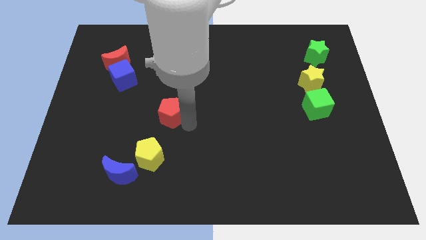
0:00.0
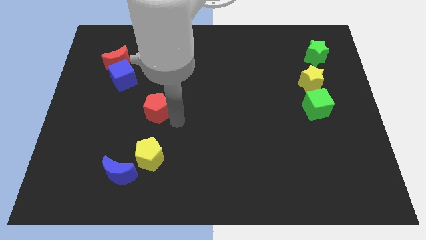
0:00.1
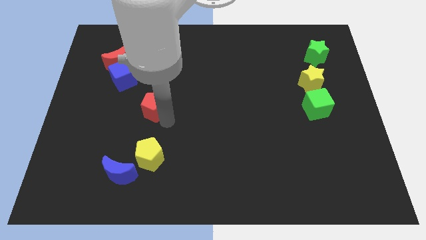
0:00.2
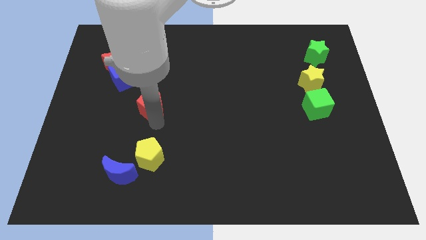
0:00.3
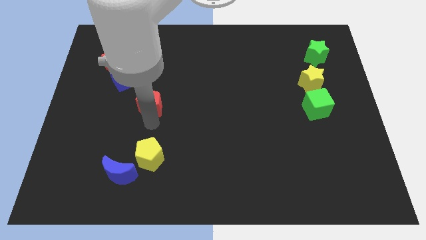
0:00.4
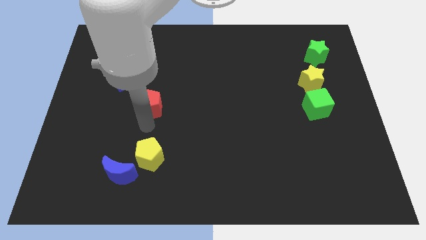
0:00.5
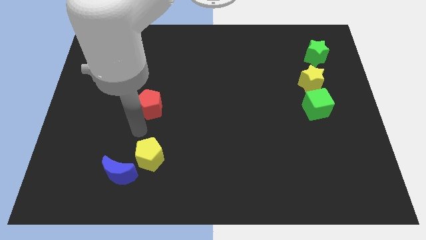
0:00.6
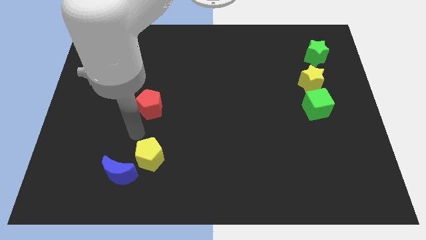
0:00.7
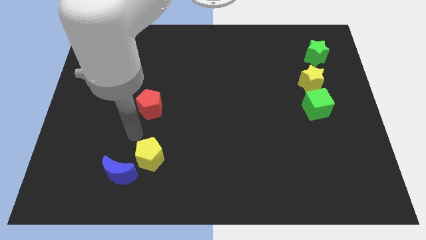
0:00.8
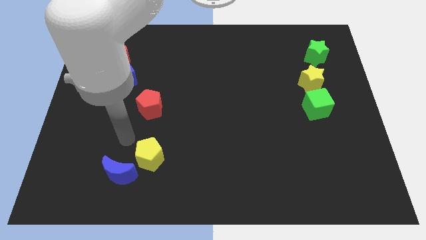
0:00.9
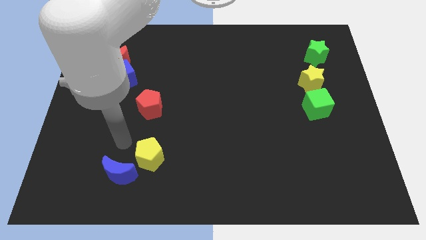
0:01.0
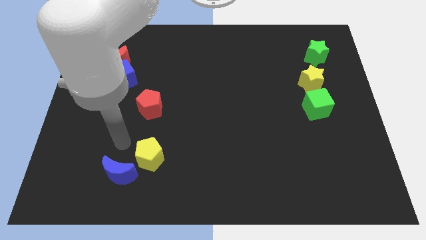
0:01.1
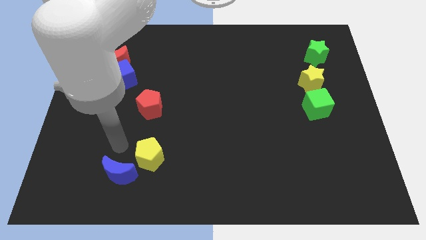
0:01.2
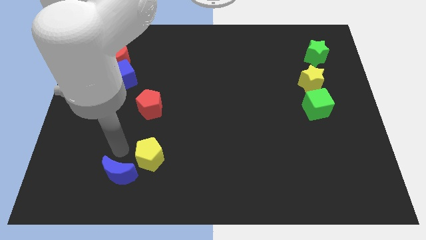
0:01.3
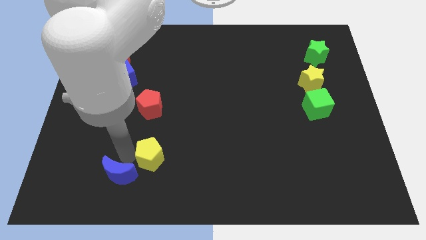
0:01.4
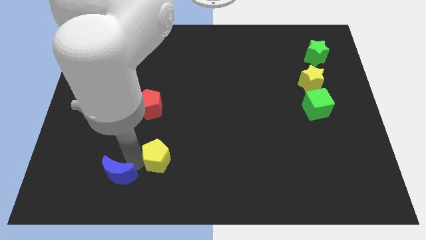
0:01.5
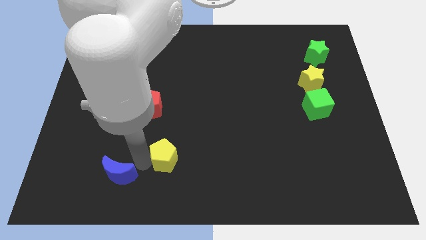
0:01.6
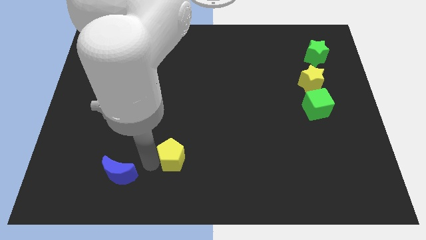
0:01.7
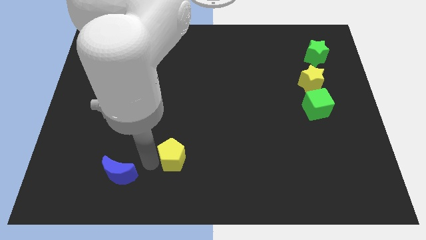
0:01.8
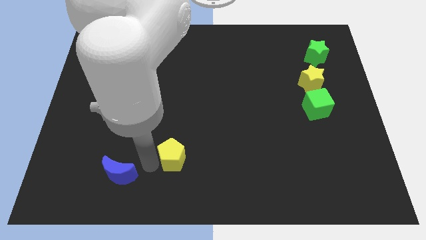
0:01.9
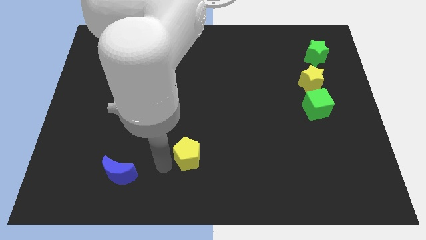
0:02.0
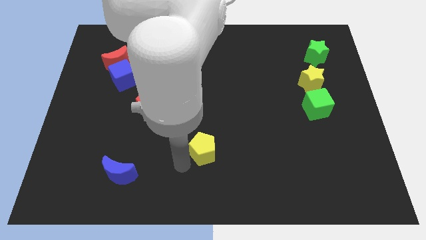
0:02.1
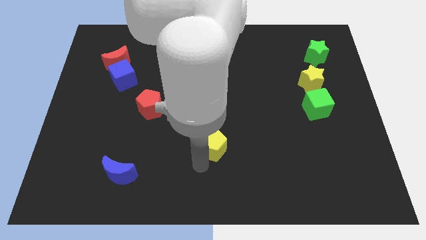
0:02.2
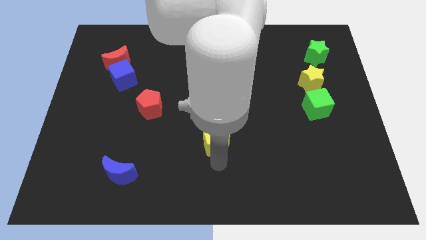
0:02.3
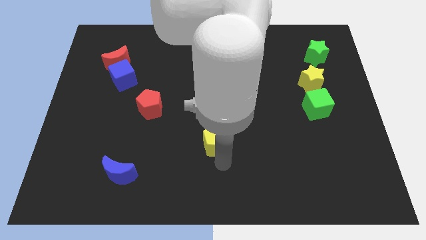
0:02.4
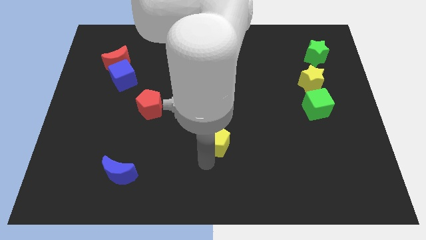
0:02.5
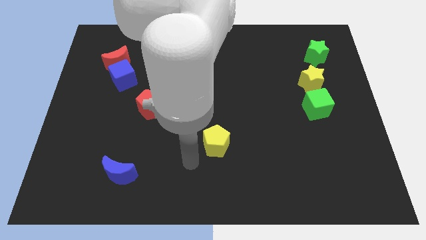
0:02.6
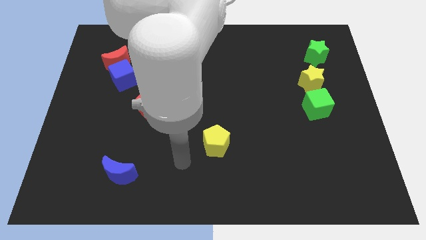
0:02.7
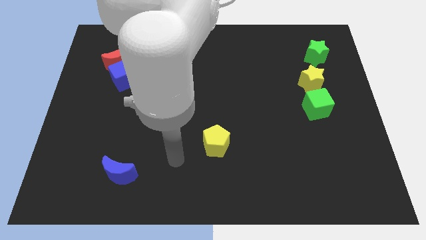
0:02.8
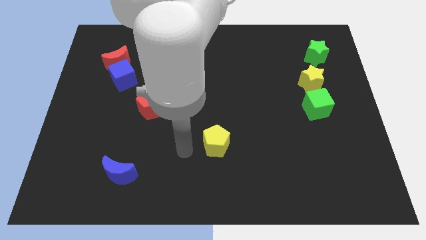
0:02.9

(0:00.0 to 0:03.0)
separate the blue moon and yellow pentagon

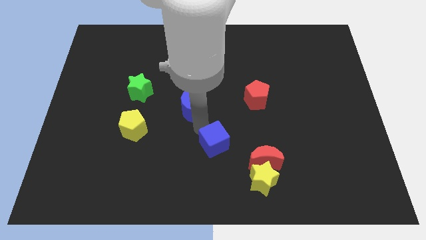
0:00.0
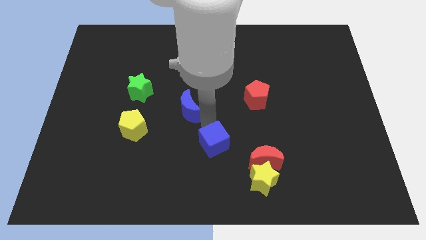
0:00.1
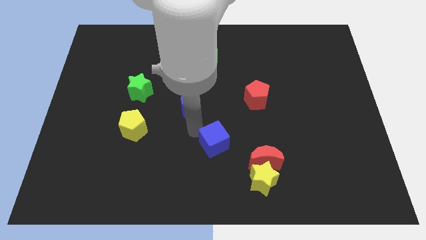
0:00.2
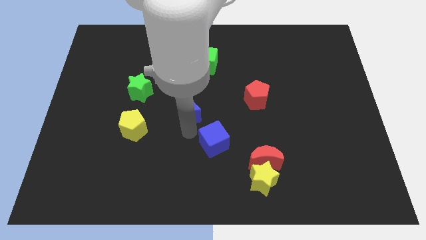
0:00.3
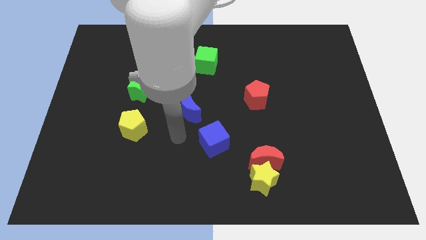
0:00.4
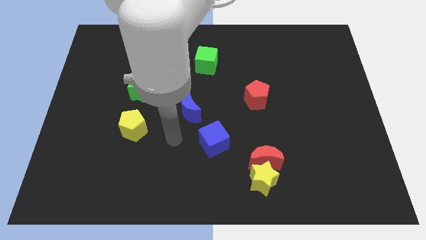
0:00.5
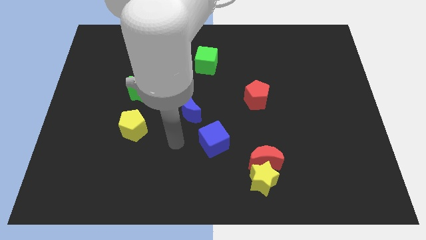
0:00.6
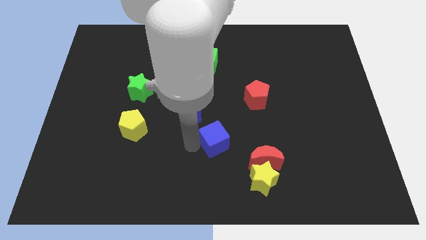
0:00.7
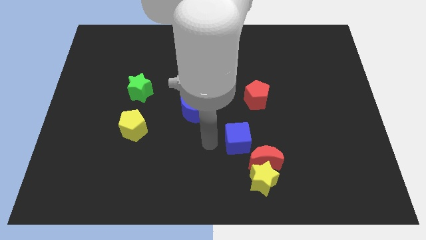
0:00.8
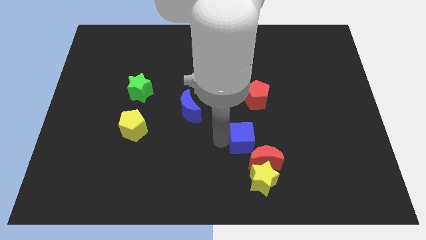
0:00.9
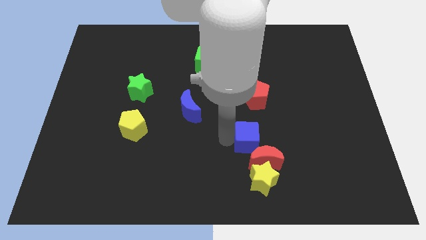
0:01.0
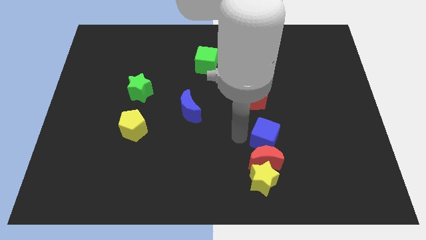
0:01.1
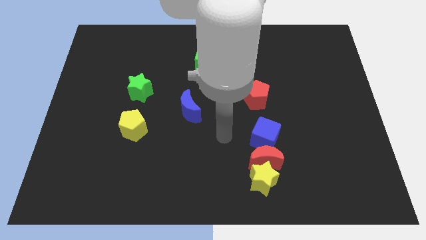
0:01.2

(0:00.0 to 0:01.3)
slide the blue cube above the red moon

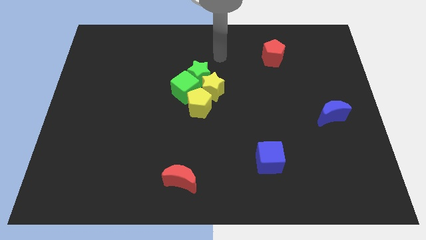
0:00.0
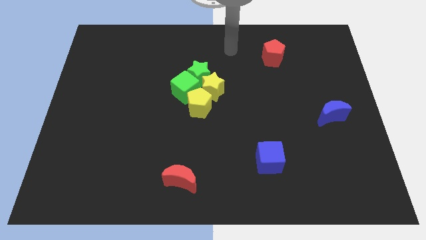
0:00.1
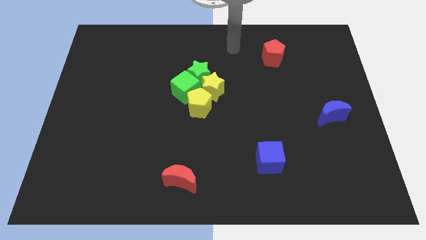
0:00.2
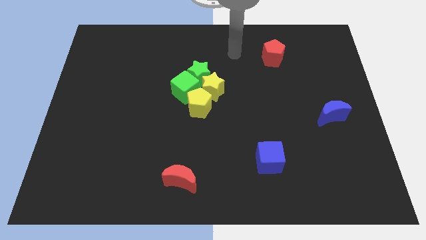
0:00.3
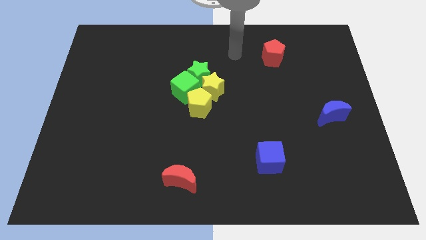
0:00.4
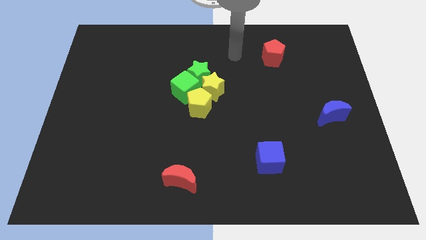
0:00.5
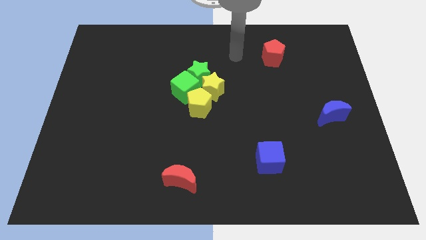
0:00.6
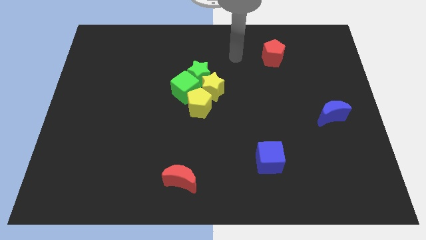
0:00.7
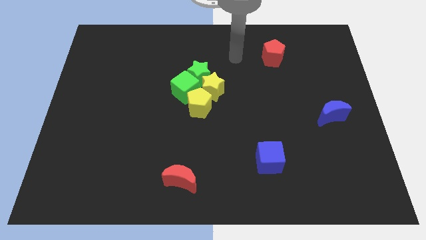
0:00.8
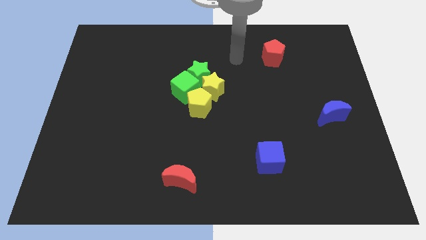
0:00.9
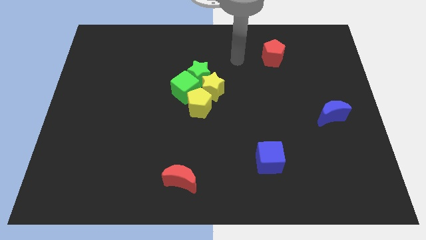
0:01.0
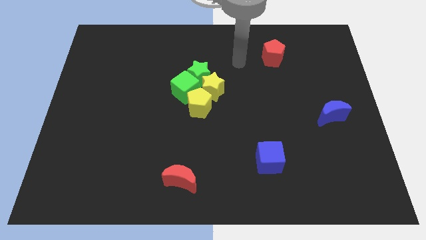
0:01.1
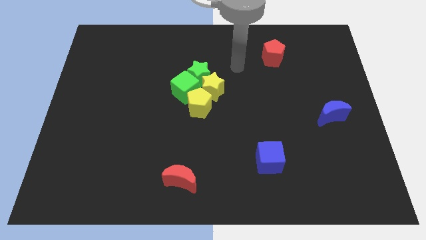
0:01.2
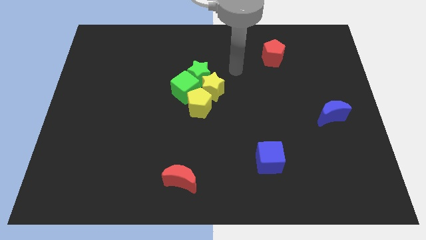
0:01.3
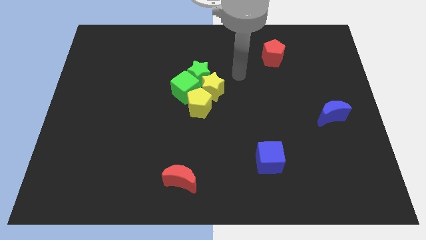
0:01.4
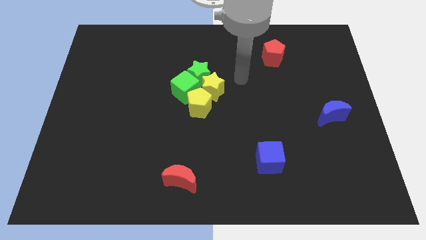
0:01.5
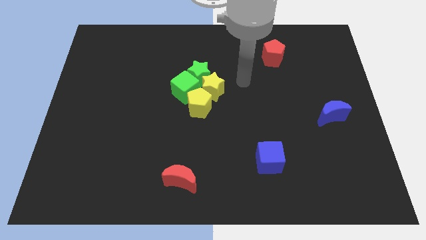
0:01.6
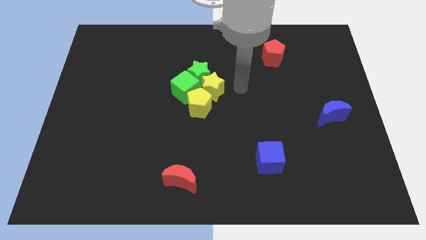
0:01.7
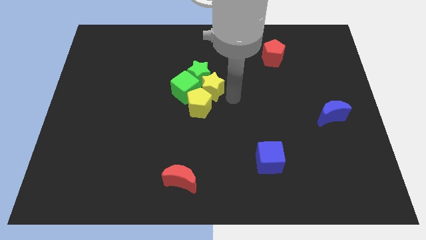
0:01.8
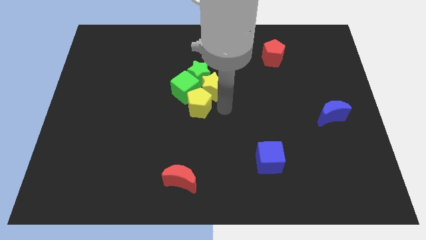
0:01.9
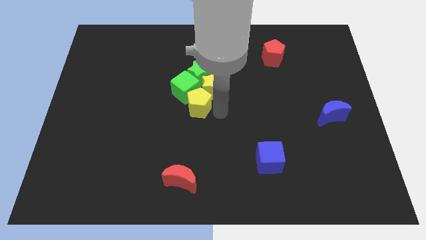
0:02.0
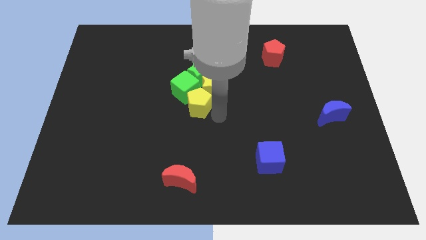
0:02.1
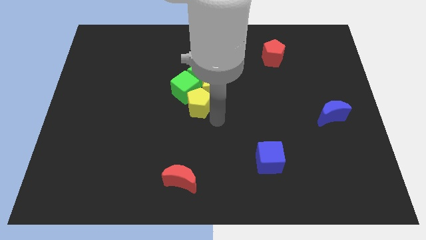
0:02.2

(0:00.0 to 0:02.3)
move your arm and point below the yellow pentagon

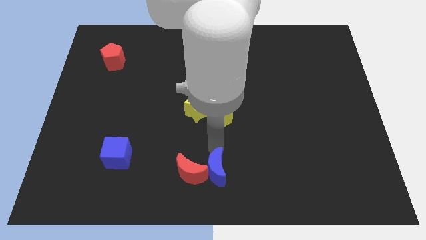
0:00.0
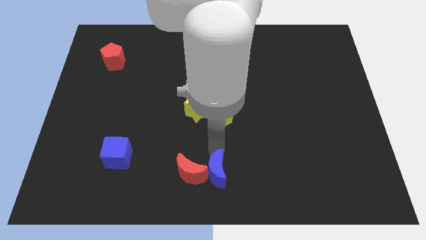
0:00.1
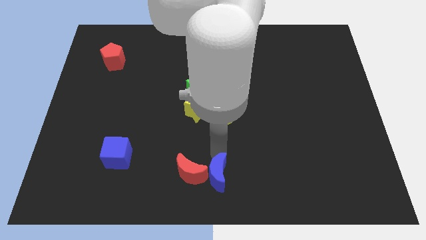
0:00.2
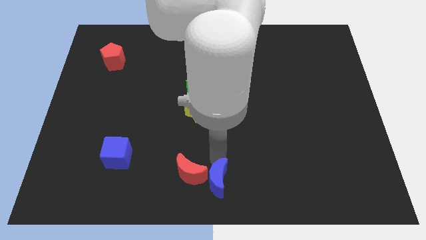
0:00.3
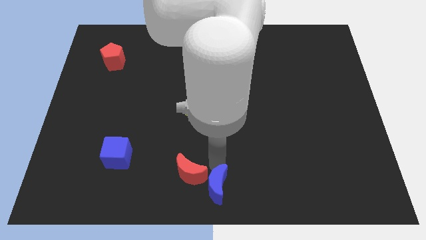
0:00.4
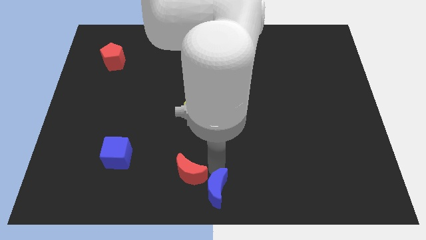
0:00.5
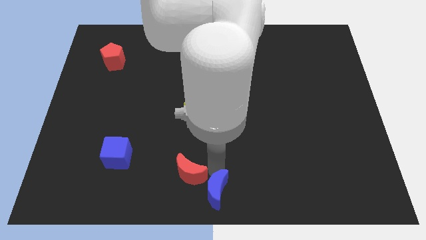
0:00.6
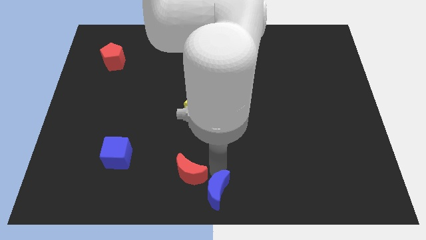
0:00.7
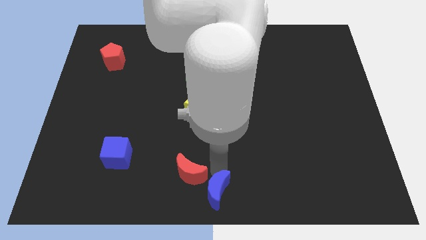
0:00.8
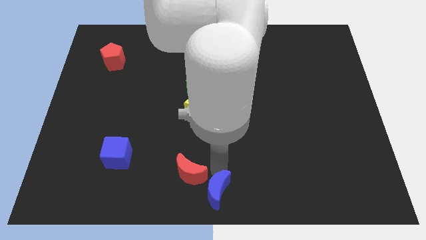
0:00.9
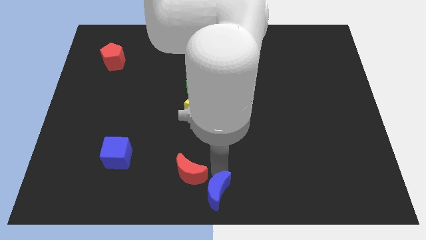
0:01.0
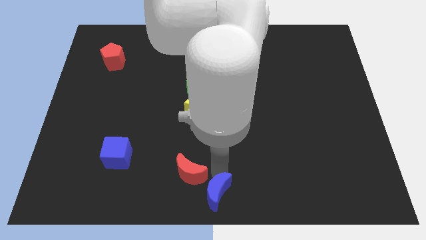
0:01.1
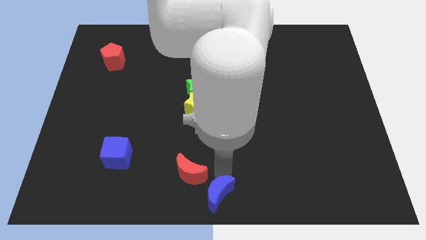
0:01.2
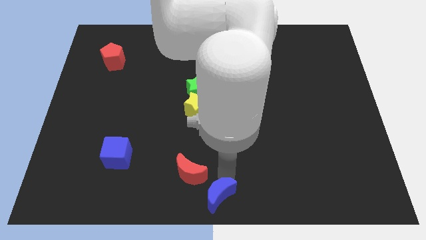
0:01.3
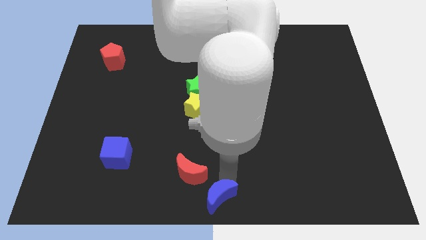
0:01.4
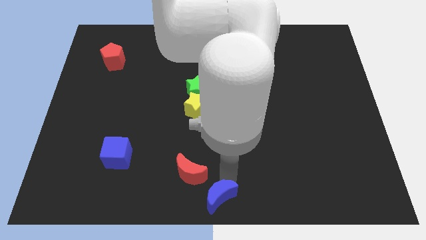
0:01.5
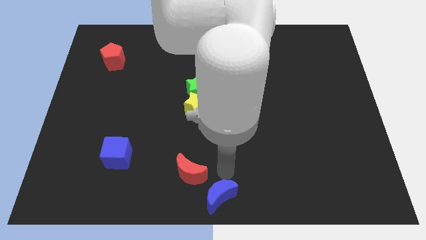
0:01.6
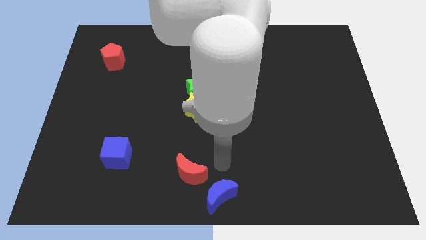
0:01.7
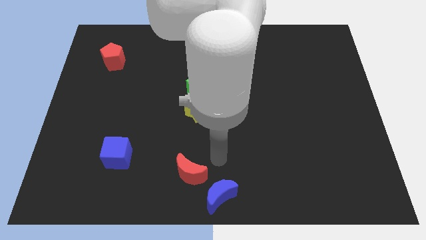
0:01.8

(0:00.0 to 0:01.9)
slide the blue moon to the bottom center

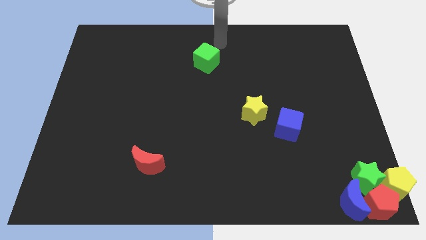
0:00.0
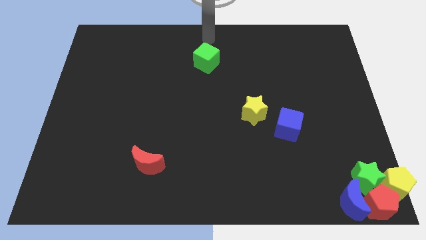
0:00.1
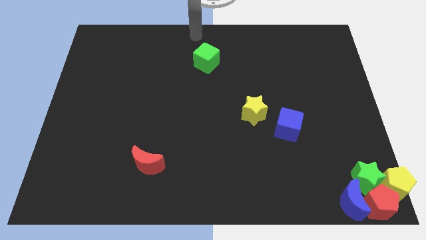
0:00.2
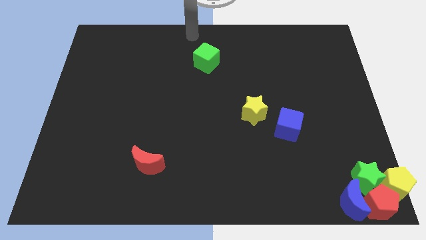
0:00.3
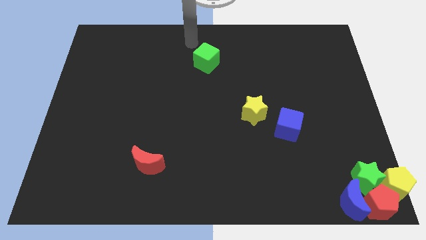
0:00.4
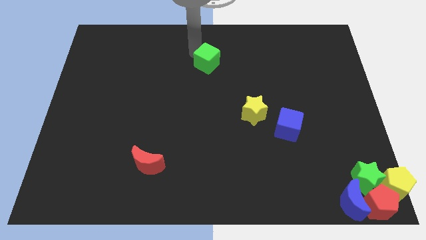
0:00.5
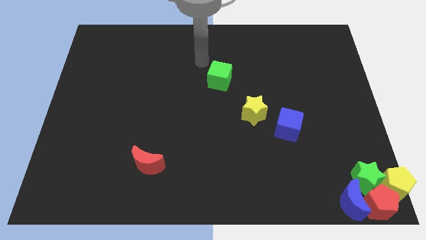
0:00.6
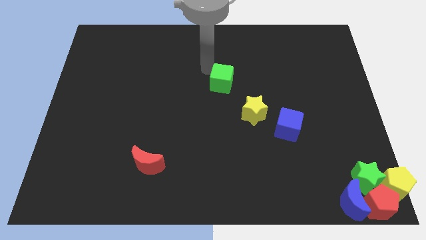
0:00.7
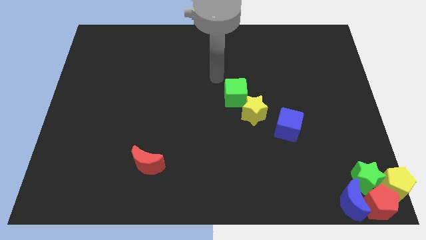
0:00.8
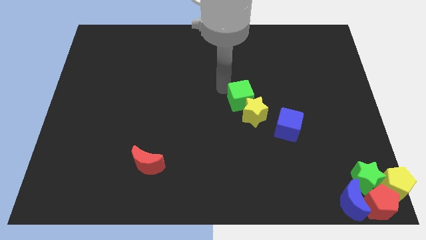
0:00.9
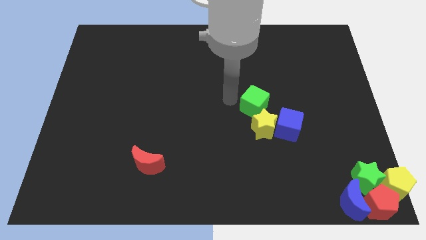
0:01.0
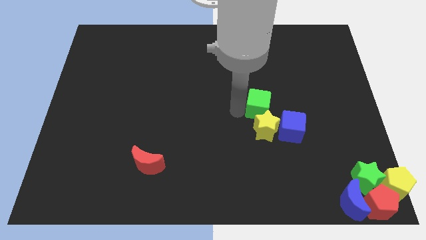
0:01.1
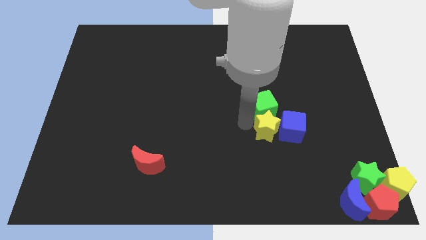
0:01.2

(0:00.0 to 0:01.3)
place the green cube vertically above the yellow star
